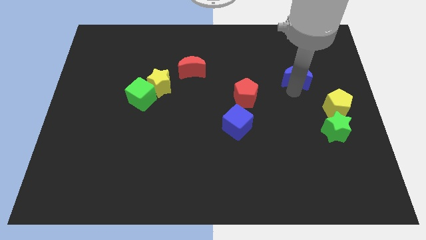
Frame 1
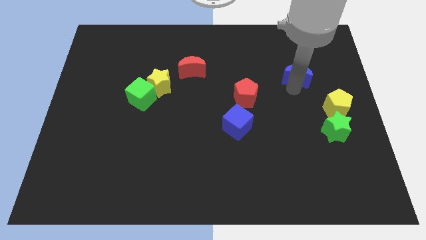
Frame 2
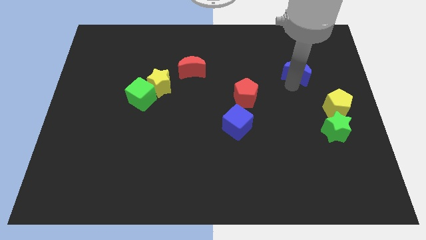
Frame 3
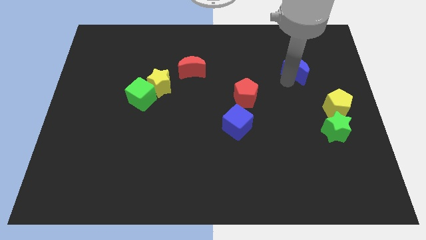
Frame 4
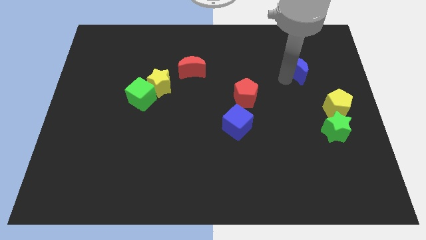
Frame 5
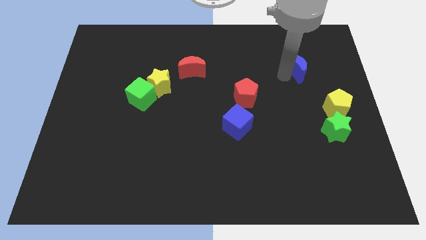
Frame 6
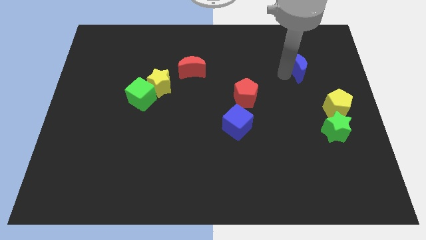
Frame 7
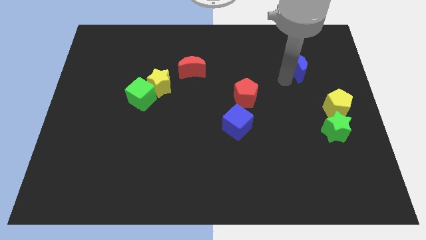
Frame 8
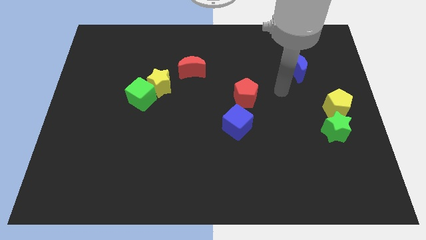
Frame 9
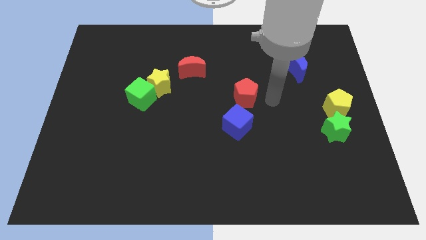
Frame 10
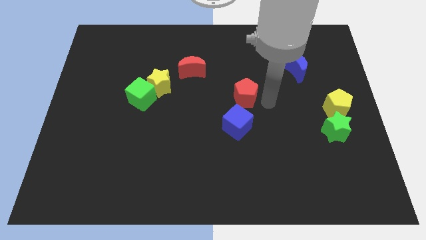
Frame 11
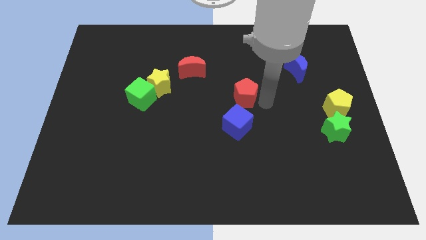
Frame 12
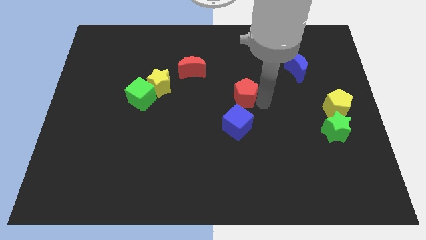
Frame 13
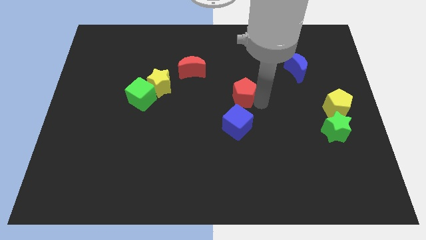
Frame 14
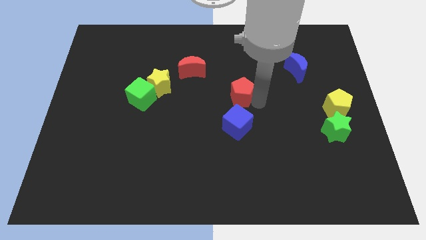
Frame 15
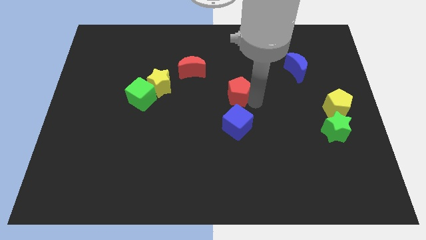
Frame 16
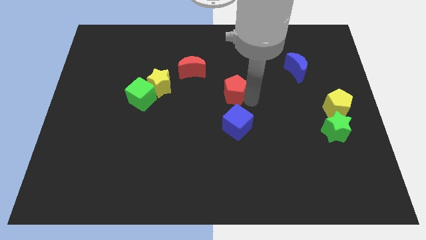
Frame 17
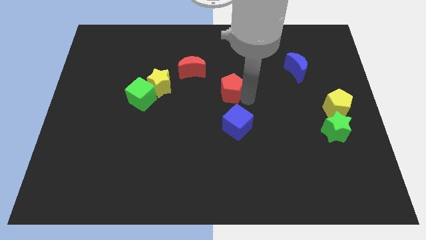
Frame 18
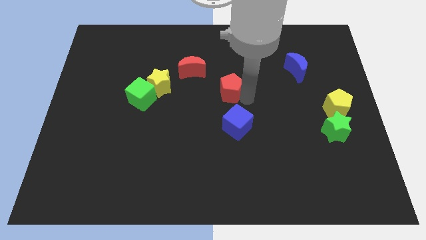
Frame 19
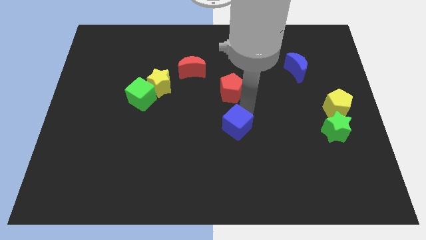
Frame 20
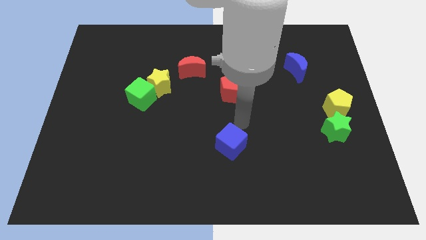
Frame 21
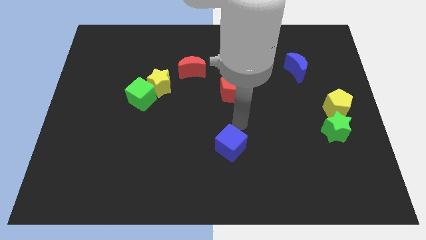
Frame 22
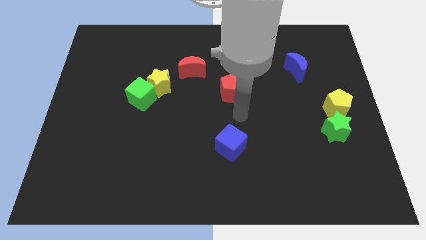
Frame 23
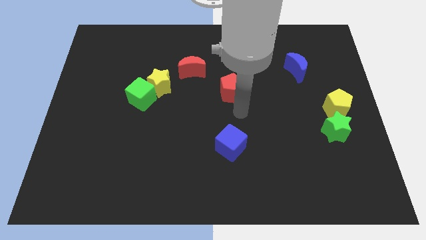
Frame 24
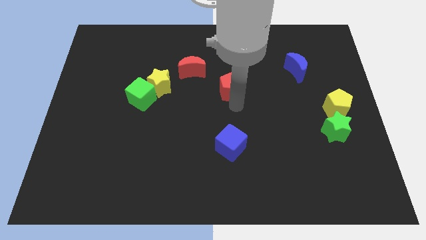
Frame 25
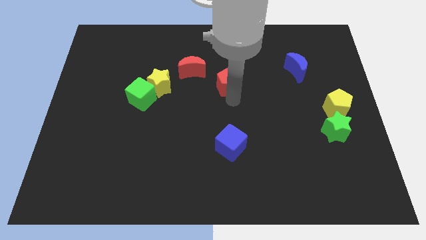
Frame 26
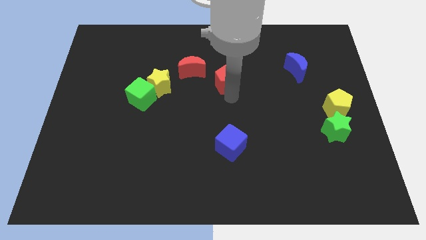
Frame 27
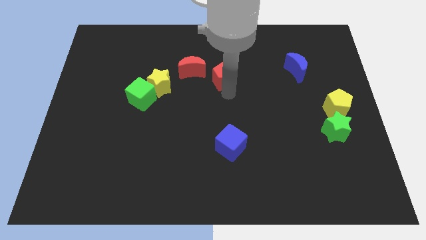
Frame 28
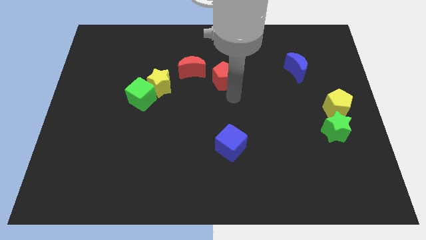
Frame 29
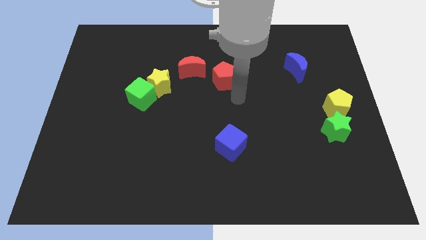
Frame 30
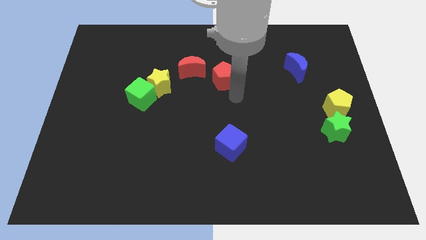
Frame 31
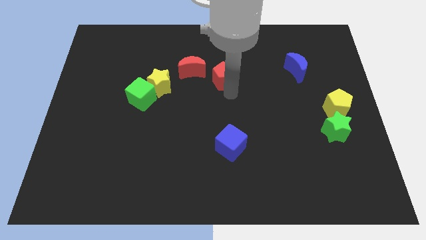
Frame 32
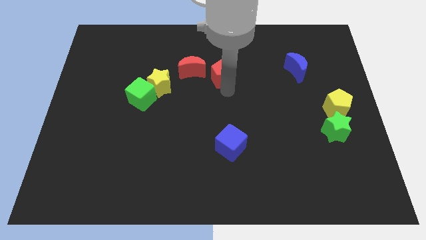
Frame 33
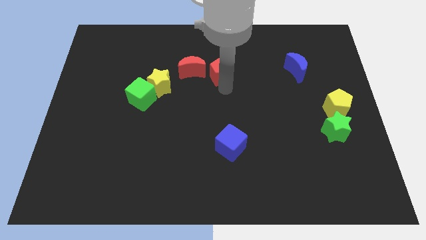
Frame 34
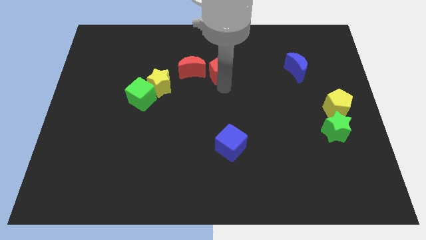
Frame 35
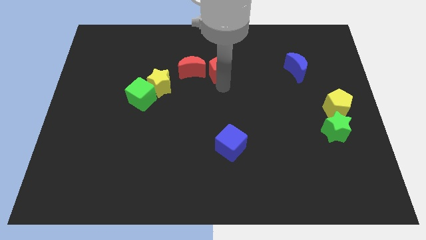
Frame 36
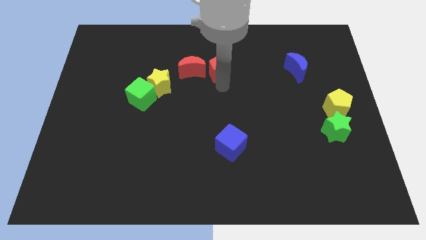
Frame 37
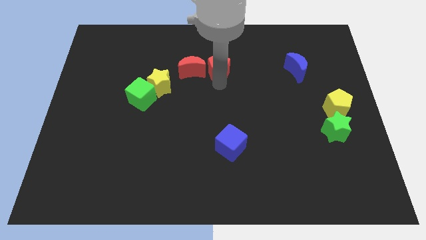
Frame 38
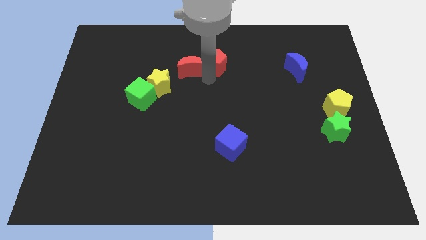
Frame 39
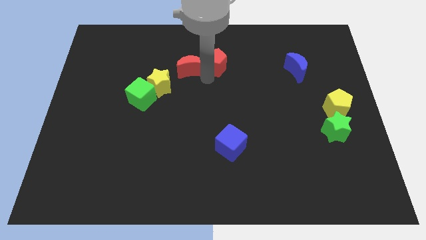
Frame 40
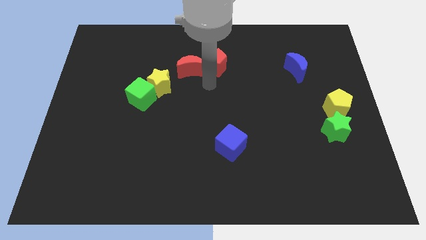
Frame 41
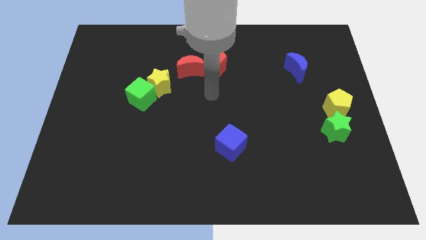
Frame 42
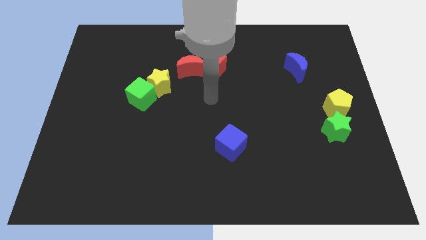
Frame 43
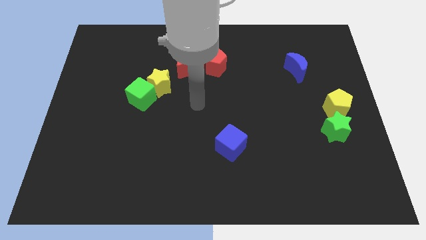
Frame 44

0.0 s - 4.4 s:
push red pentagon into red crescent

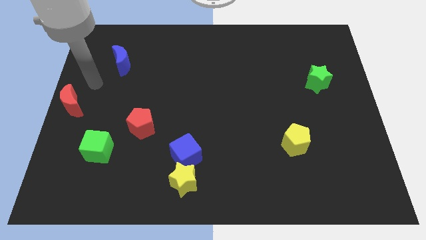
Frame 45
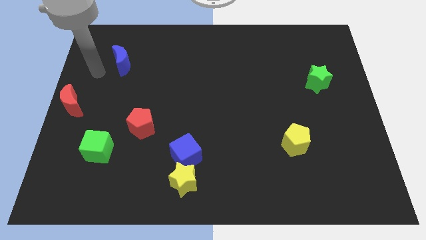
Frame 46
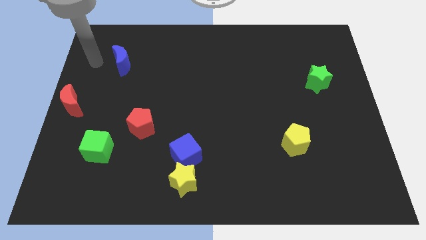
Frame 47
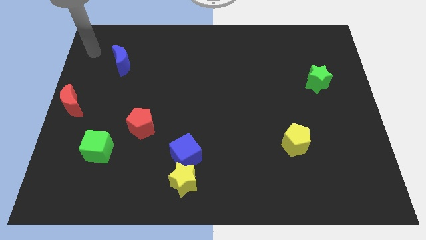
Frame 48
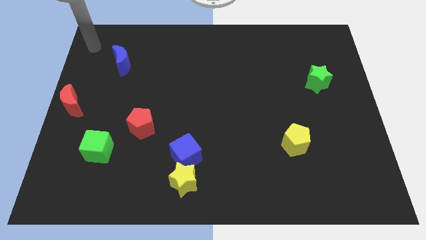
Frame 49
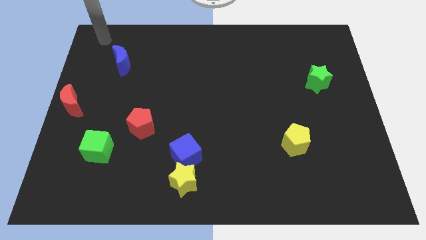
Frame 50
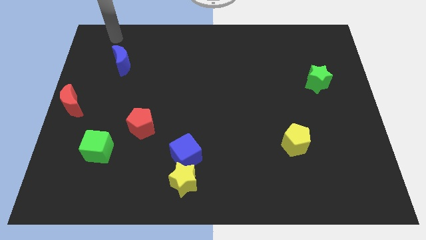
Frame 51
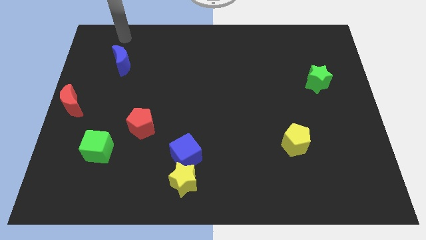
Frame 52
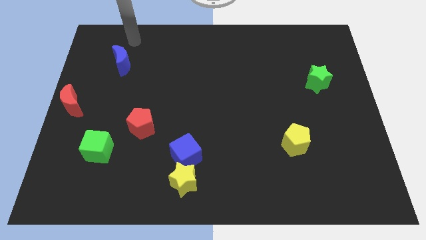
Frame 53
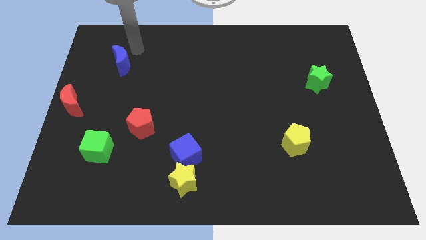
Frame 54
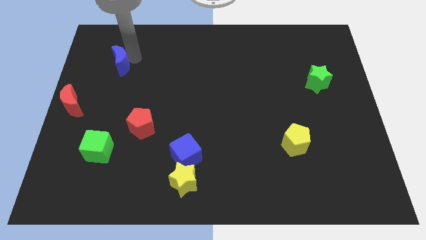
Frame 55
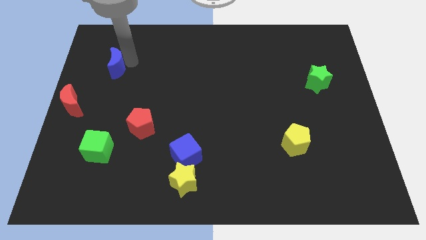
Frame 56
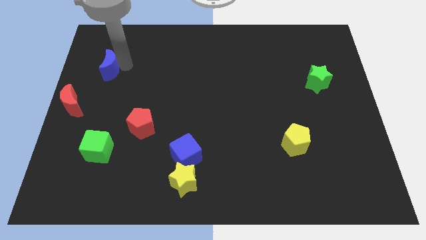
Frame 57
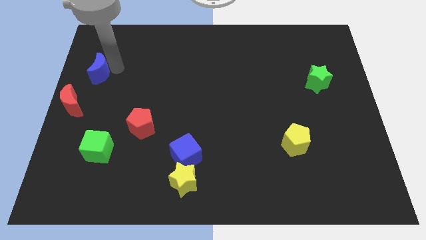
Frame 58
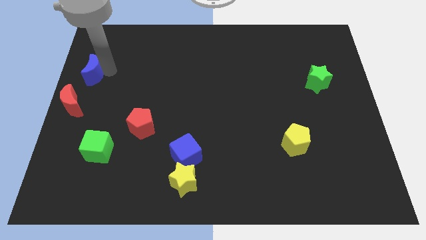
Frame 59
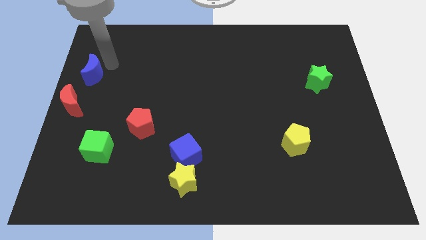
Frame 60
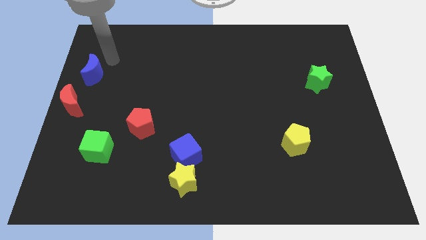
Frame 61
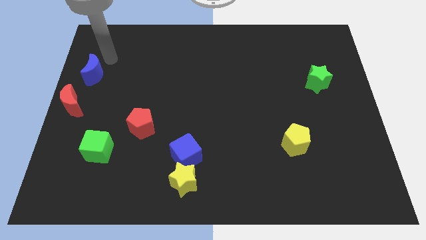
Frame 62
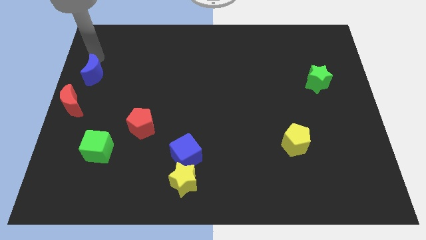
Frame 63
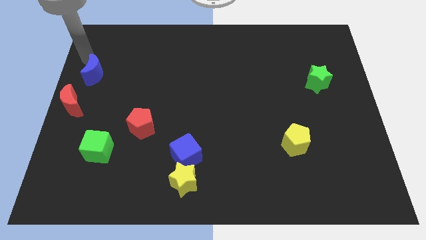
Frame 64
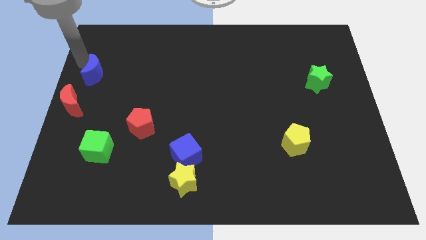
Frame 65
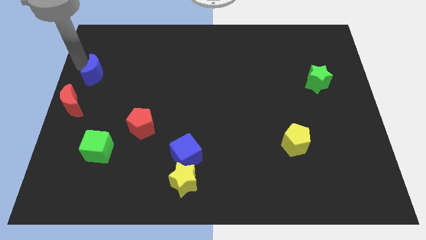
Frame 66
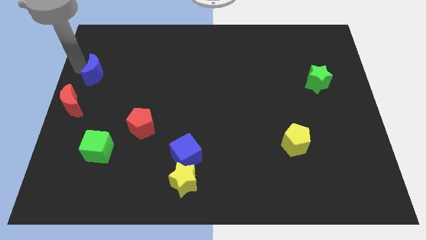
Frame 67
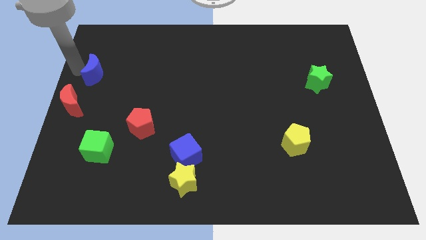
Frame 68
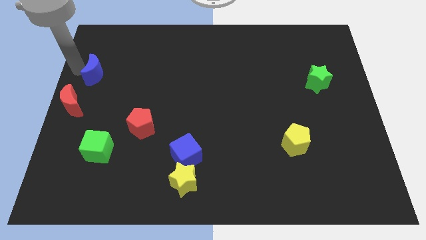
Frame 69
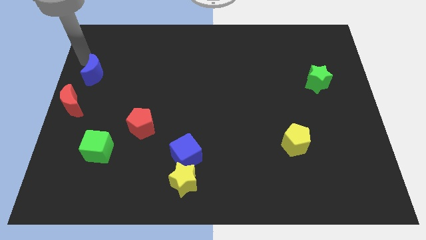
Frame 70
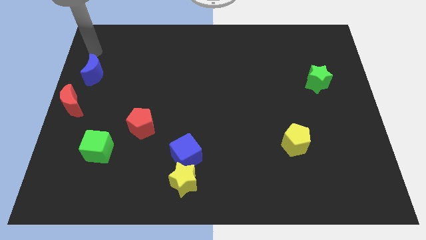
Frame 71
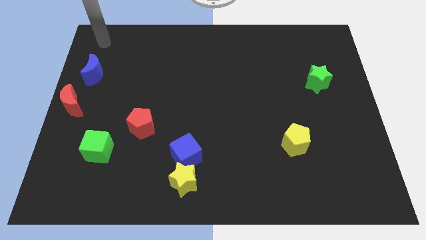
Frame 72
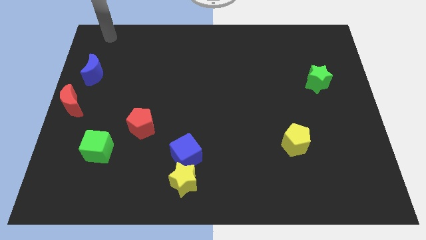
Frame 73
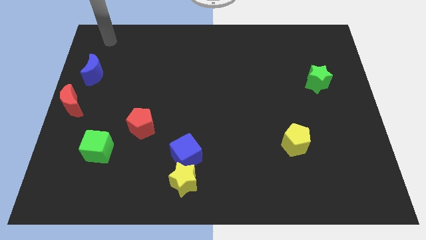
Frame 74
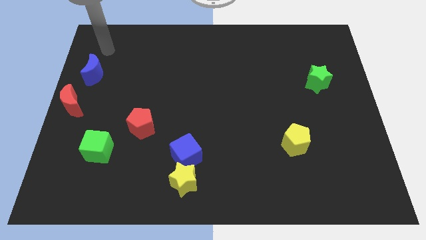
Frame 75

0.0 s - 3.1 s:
slide blue moon above red moon

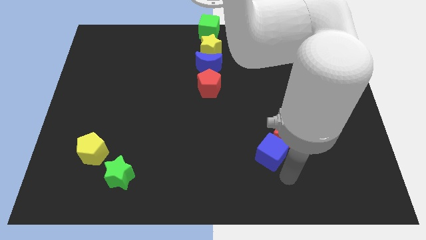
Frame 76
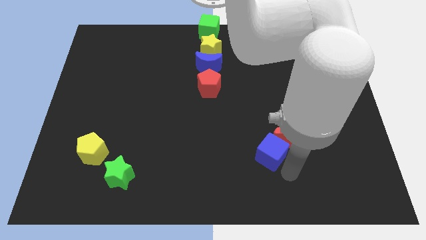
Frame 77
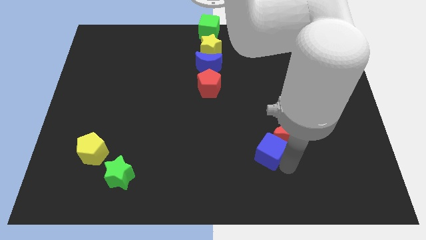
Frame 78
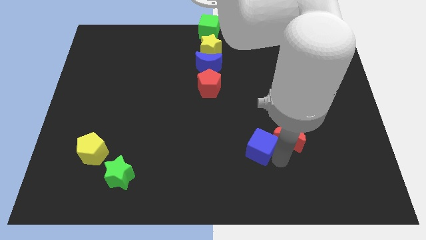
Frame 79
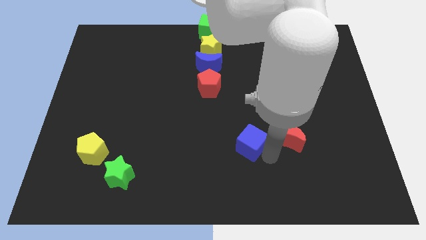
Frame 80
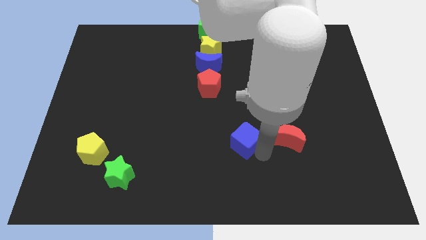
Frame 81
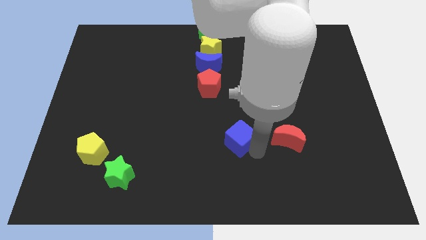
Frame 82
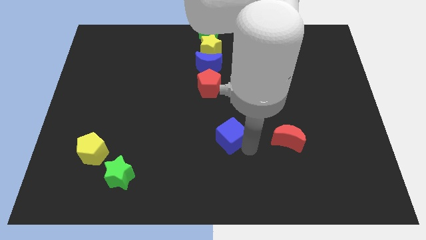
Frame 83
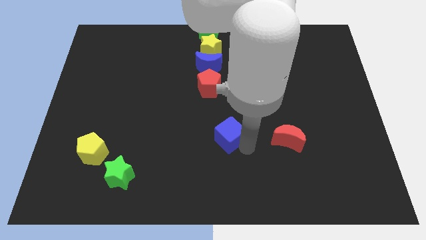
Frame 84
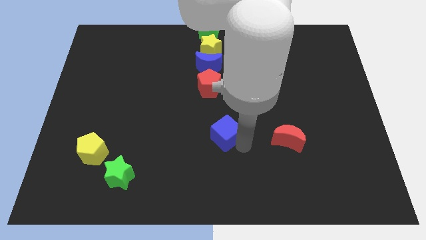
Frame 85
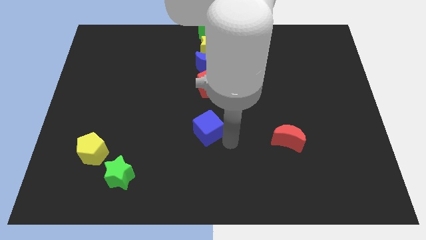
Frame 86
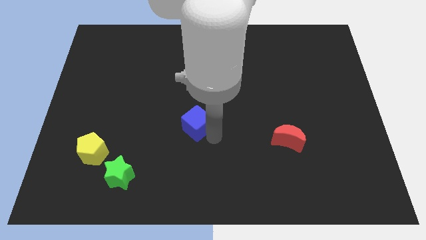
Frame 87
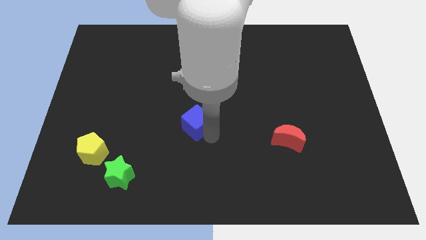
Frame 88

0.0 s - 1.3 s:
move the blue cube to the bottom center

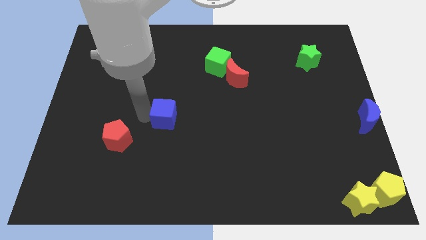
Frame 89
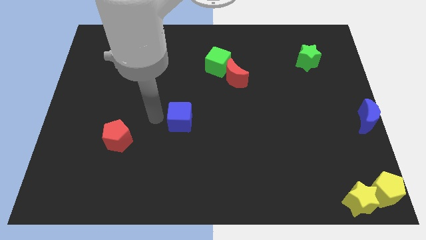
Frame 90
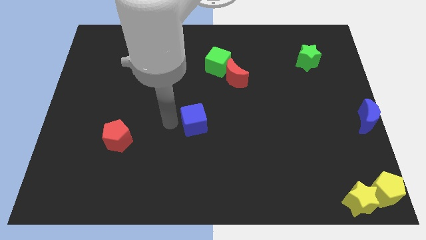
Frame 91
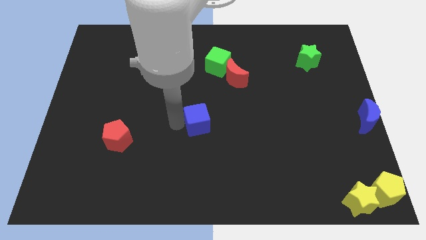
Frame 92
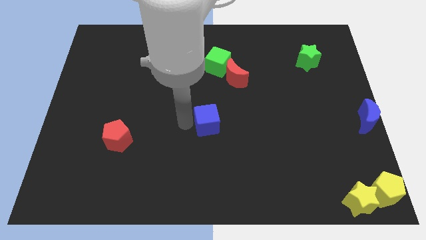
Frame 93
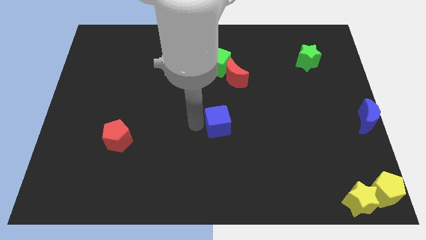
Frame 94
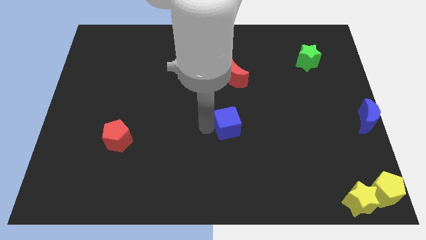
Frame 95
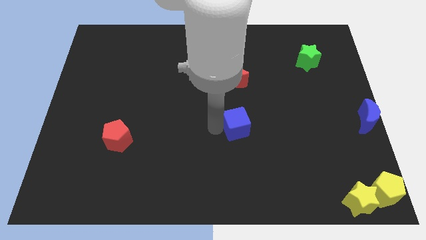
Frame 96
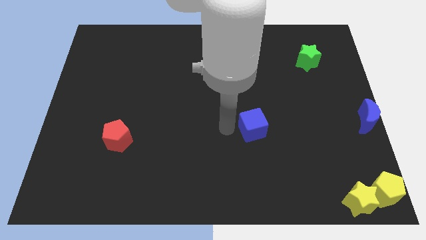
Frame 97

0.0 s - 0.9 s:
place the blue cube below the red moon
